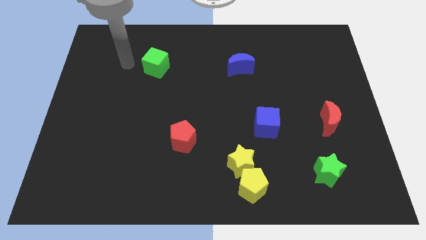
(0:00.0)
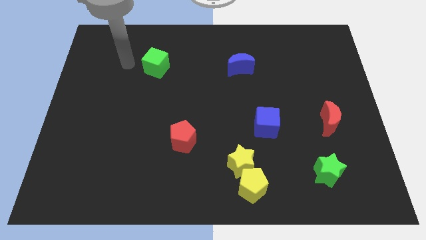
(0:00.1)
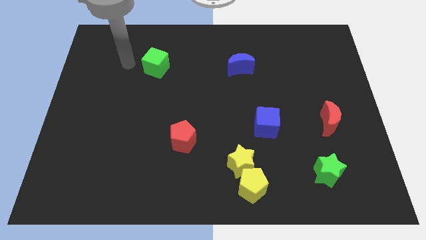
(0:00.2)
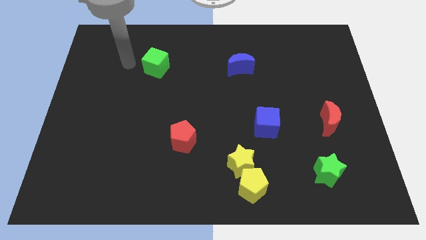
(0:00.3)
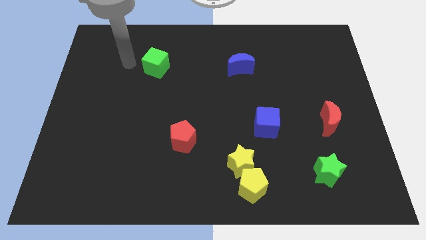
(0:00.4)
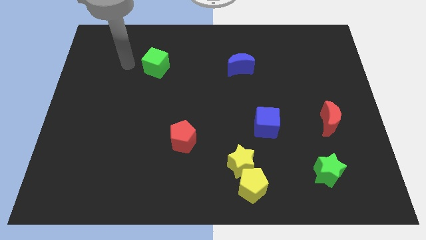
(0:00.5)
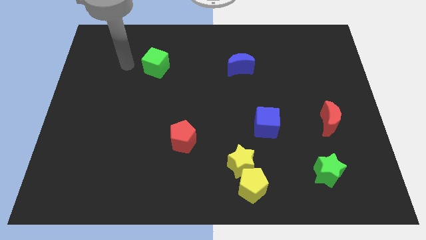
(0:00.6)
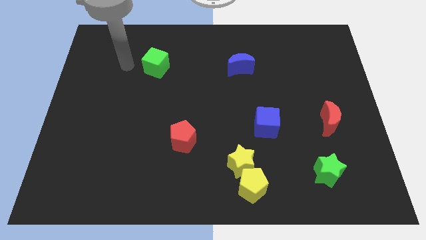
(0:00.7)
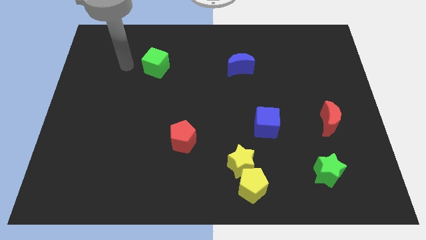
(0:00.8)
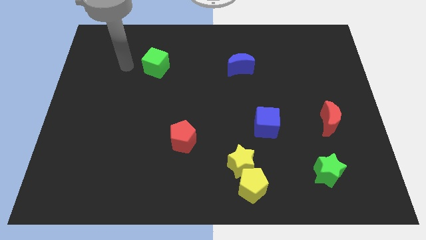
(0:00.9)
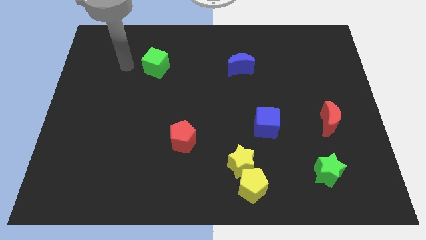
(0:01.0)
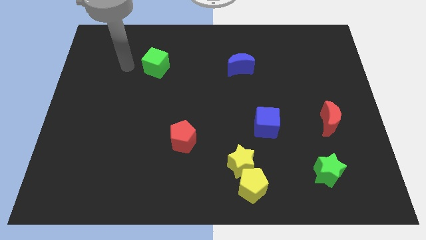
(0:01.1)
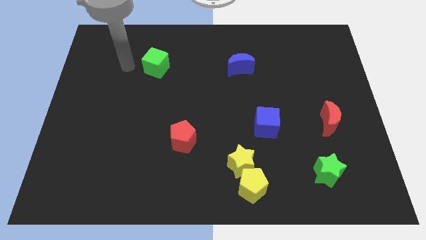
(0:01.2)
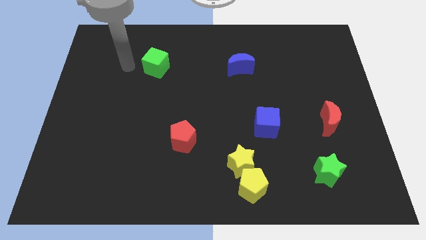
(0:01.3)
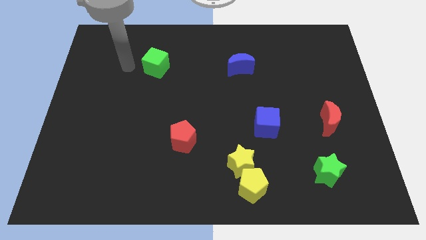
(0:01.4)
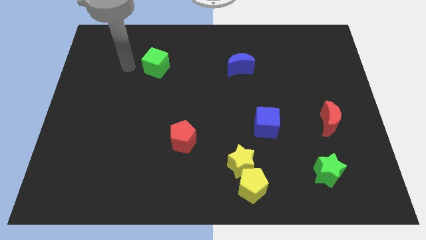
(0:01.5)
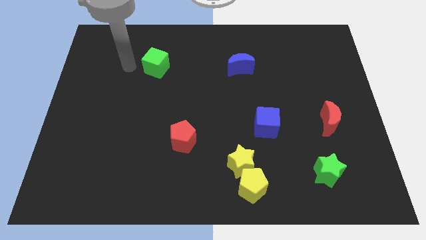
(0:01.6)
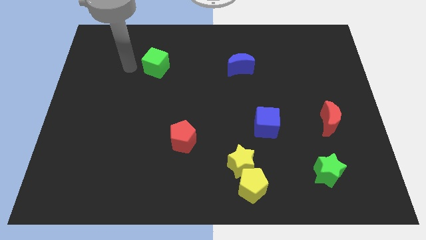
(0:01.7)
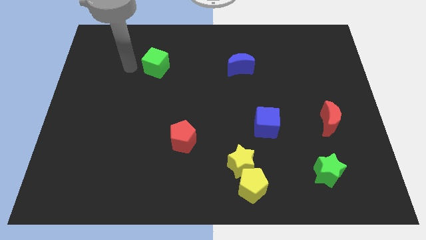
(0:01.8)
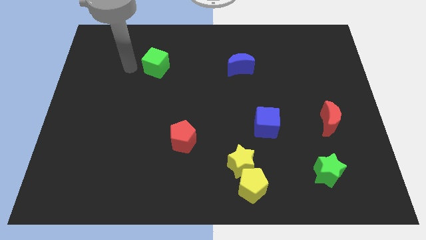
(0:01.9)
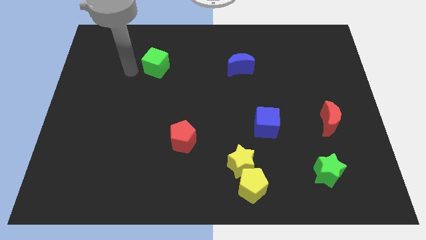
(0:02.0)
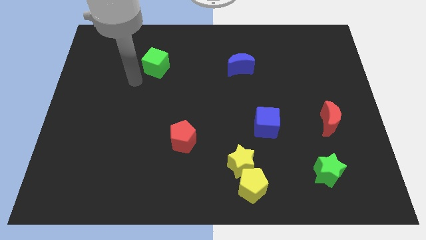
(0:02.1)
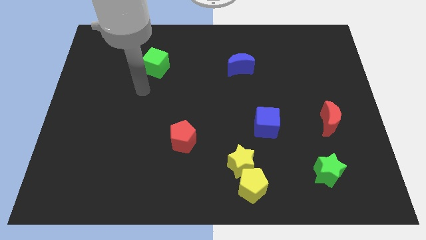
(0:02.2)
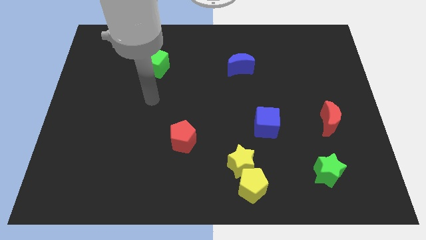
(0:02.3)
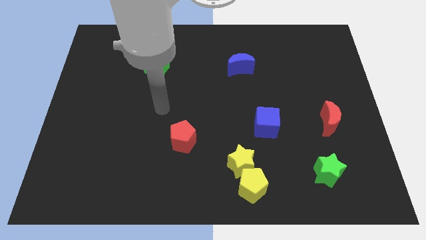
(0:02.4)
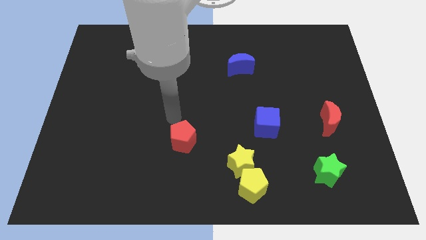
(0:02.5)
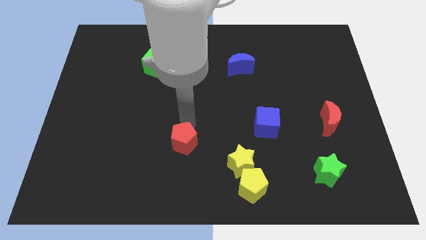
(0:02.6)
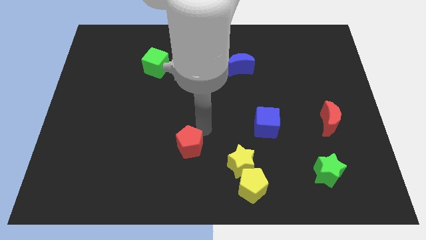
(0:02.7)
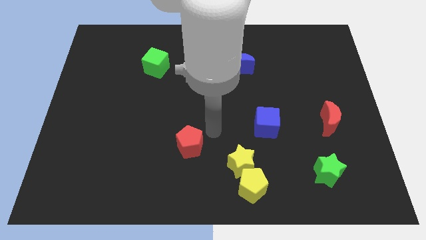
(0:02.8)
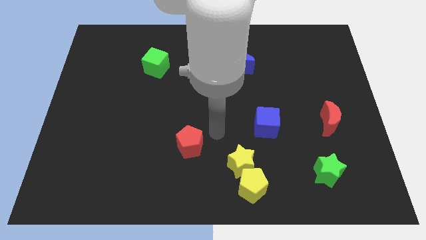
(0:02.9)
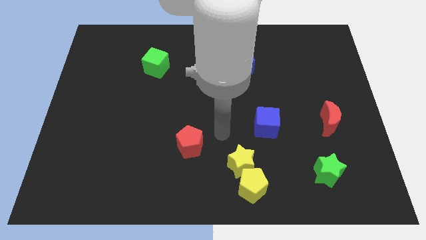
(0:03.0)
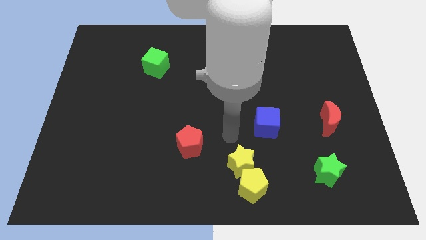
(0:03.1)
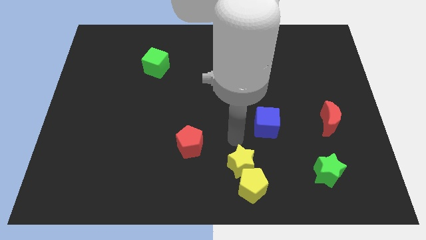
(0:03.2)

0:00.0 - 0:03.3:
slightly touch the red pentagon

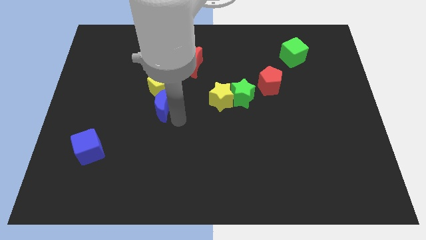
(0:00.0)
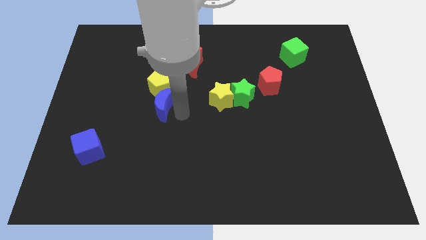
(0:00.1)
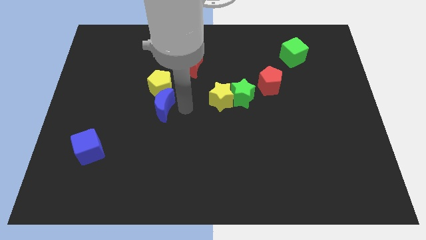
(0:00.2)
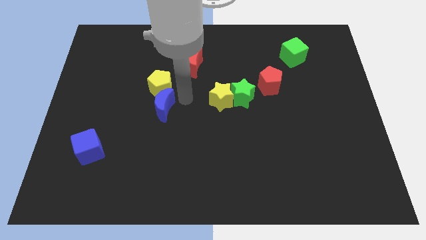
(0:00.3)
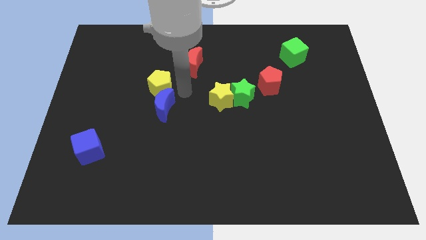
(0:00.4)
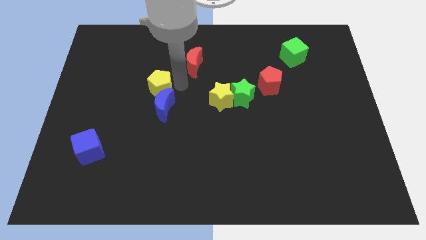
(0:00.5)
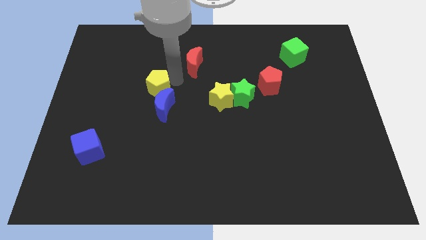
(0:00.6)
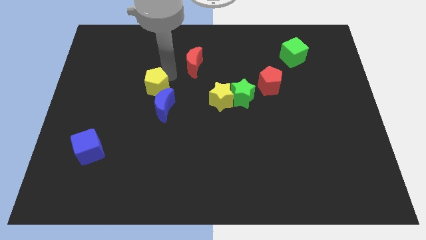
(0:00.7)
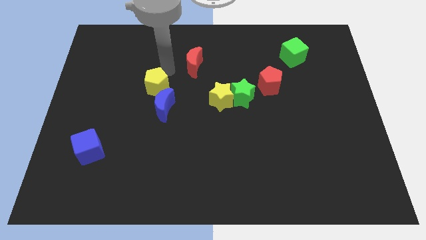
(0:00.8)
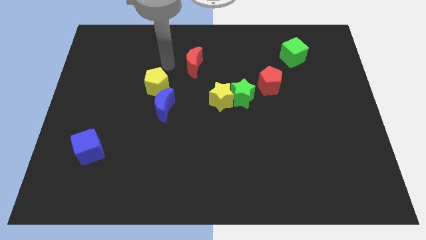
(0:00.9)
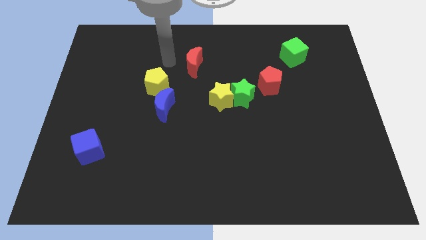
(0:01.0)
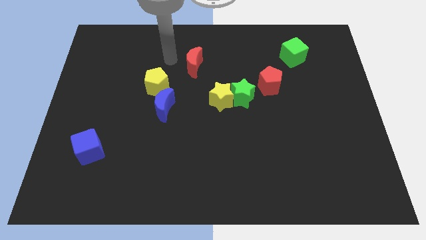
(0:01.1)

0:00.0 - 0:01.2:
tap the right side of the yellow pentagon

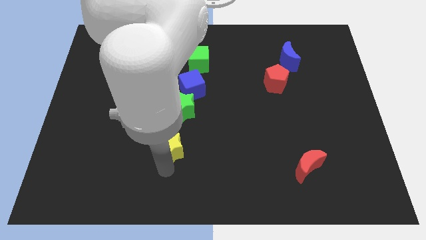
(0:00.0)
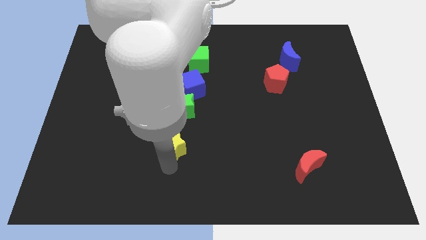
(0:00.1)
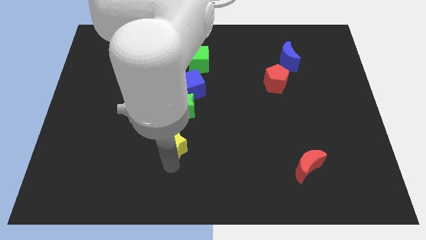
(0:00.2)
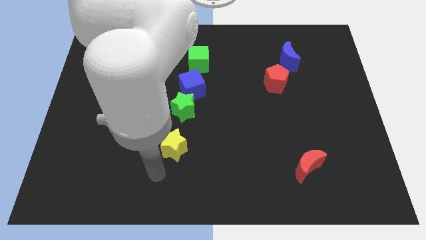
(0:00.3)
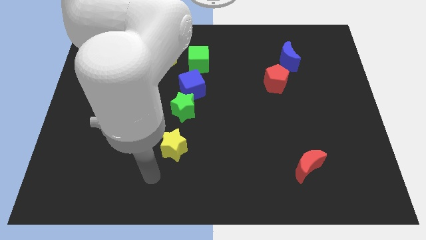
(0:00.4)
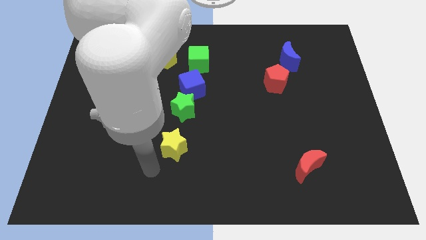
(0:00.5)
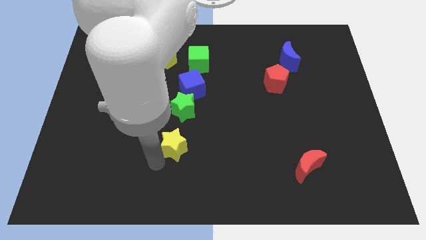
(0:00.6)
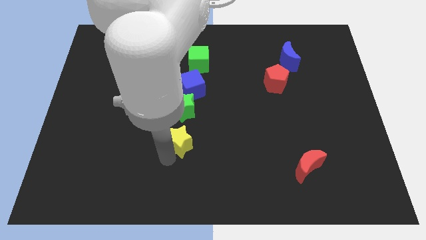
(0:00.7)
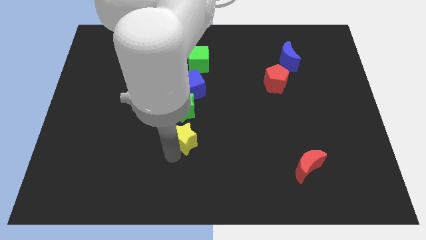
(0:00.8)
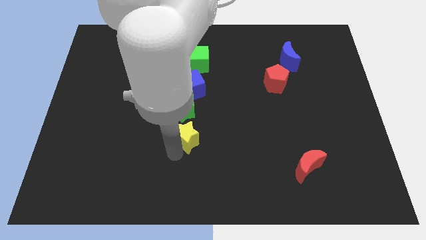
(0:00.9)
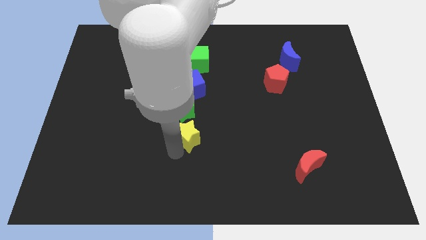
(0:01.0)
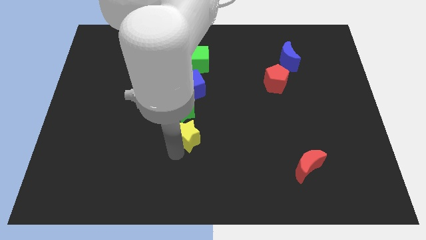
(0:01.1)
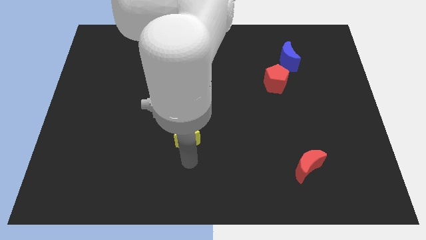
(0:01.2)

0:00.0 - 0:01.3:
slide the yellow star to the bottom of the green star

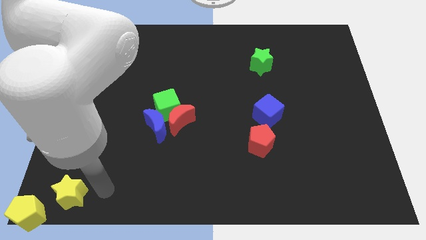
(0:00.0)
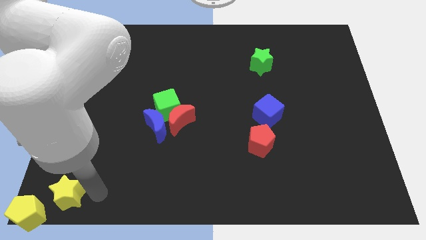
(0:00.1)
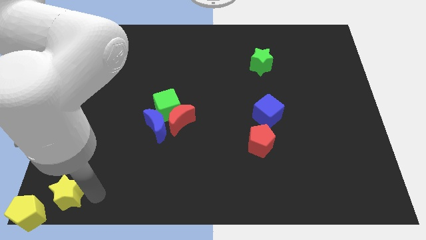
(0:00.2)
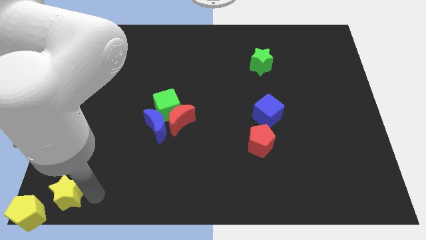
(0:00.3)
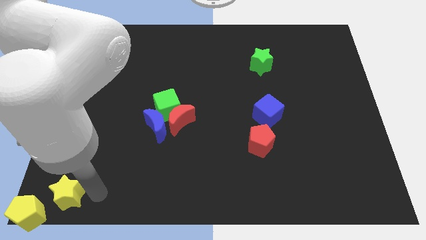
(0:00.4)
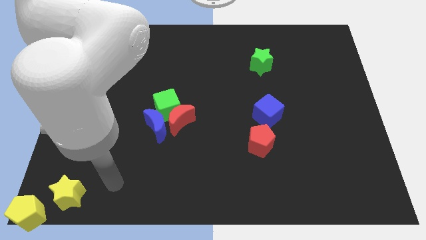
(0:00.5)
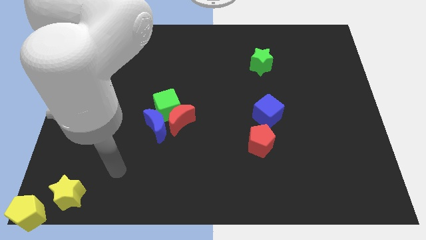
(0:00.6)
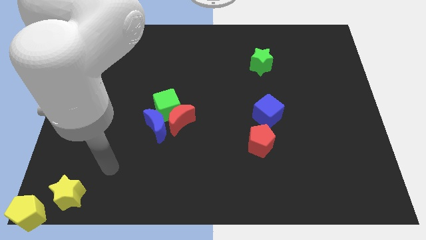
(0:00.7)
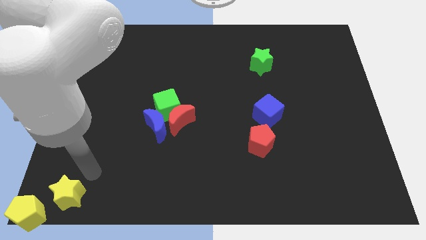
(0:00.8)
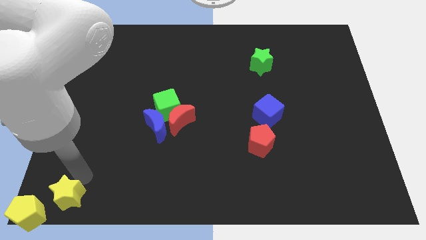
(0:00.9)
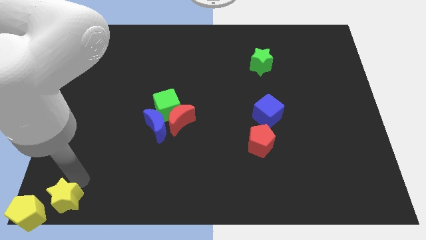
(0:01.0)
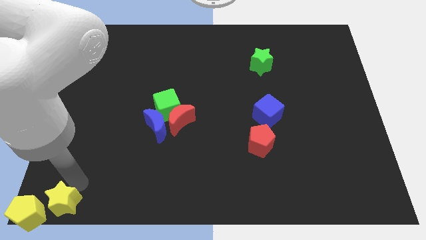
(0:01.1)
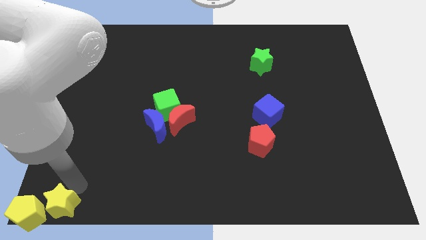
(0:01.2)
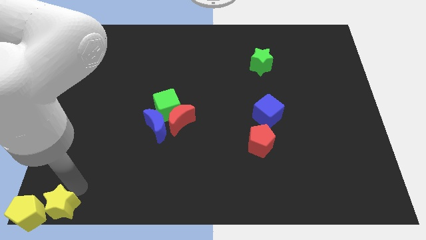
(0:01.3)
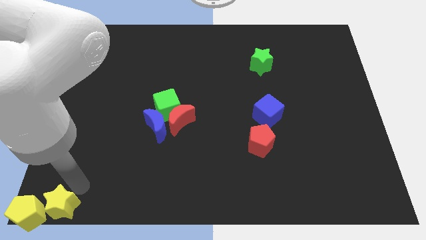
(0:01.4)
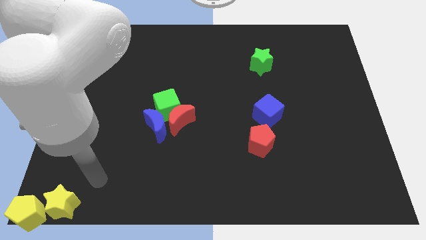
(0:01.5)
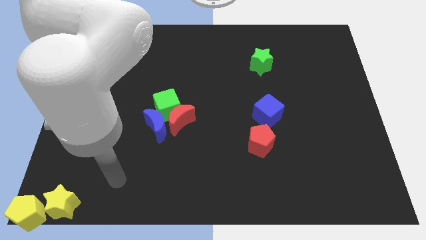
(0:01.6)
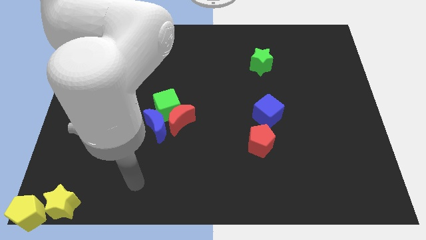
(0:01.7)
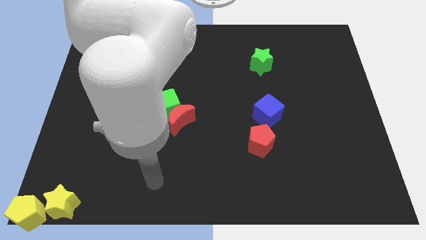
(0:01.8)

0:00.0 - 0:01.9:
drag the yellow star close to the yellow pentagon

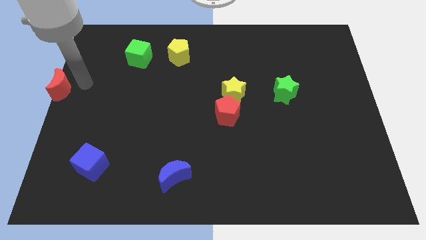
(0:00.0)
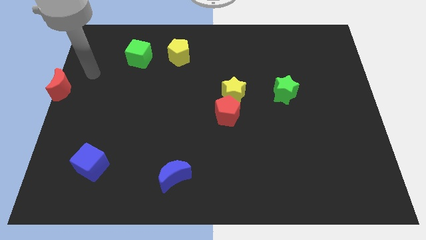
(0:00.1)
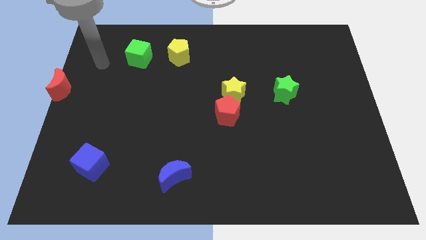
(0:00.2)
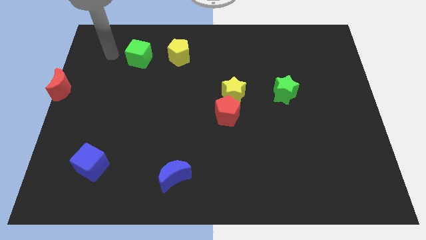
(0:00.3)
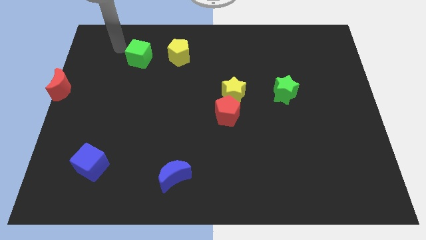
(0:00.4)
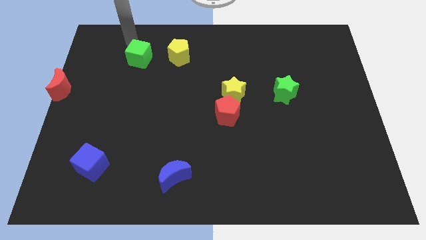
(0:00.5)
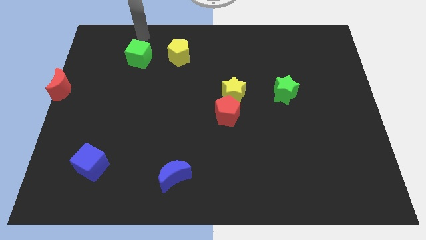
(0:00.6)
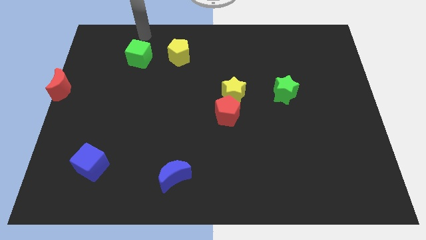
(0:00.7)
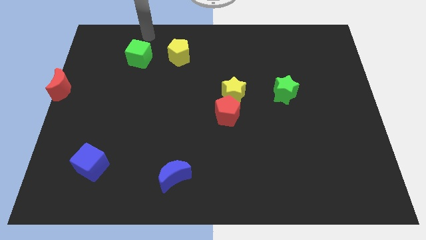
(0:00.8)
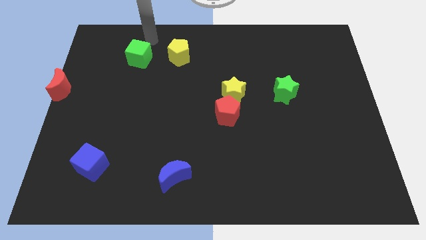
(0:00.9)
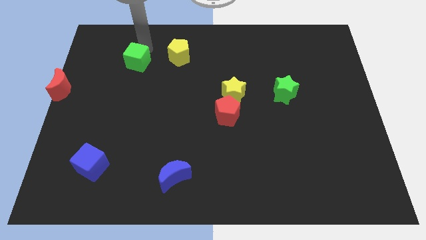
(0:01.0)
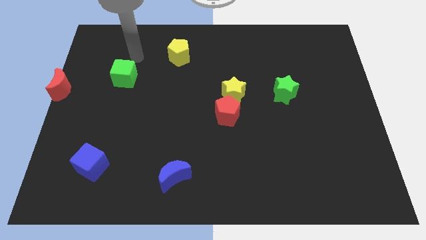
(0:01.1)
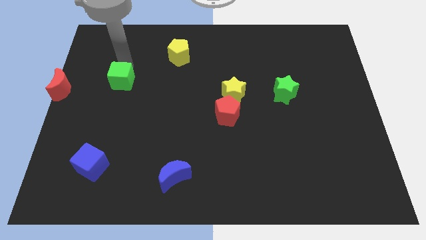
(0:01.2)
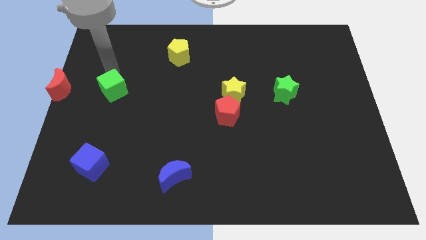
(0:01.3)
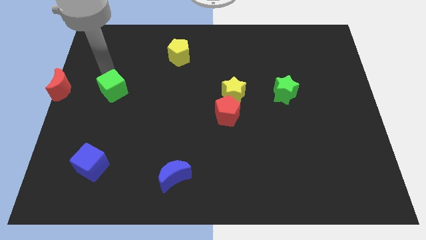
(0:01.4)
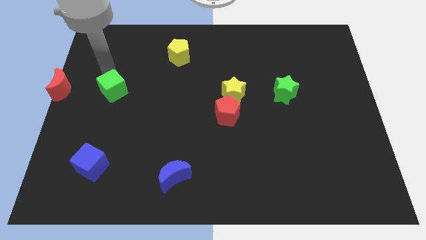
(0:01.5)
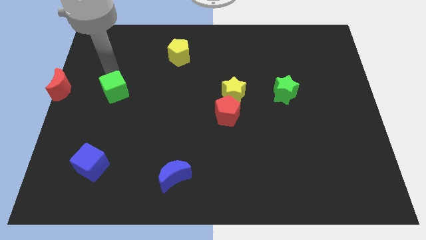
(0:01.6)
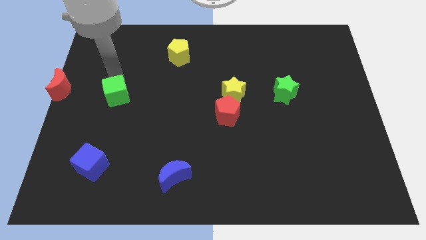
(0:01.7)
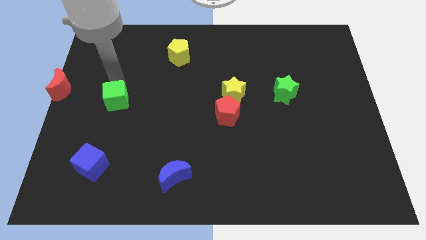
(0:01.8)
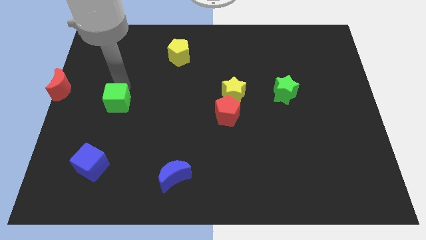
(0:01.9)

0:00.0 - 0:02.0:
push the green cube towards the bottom
